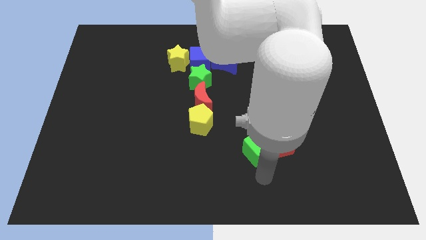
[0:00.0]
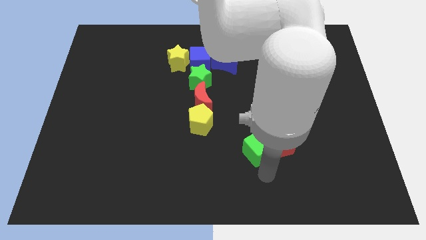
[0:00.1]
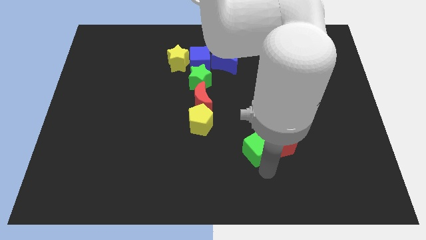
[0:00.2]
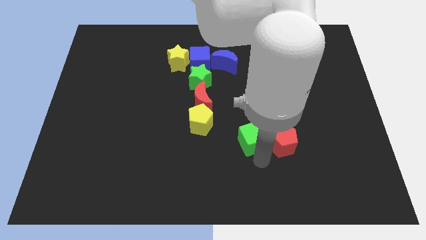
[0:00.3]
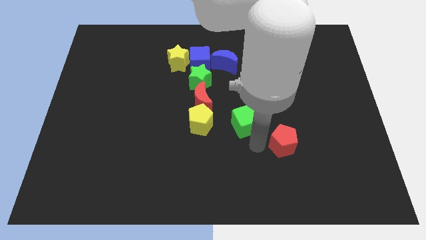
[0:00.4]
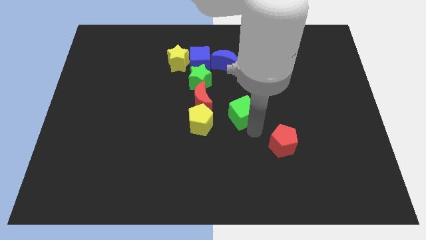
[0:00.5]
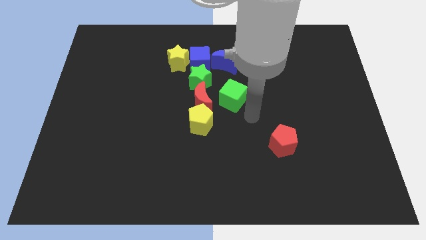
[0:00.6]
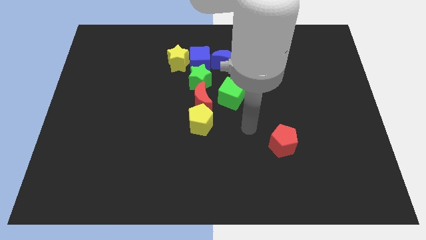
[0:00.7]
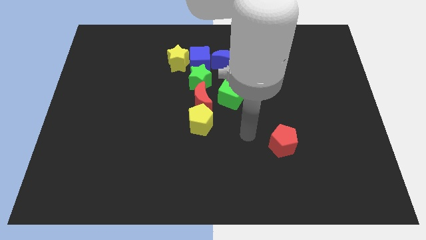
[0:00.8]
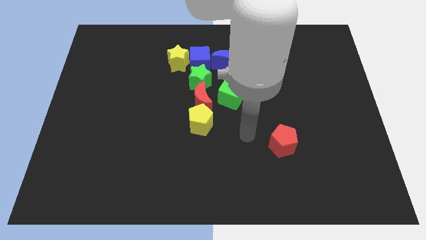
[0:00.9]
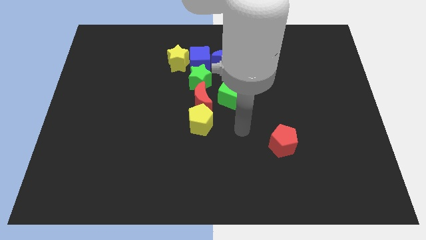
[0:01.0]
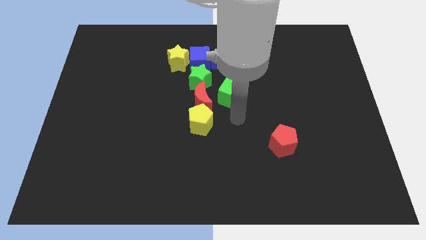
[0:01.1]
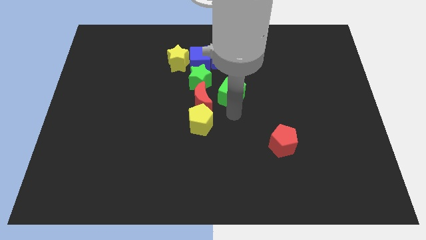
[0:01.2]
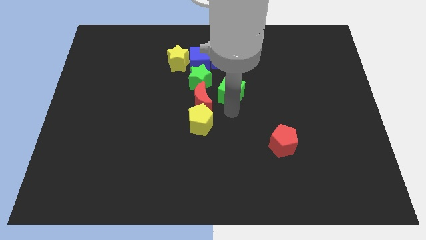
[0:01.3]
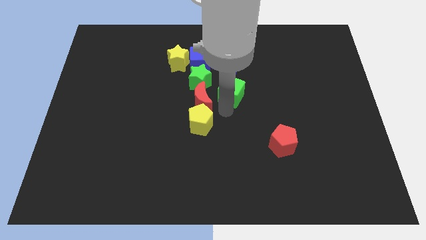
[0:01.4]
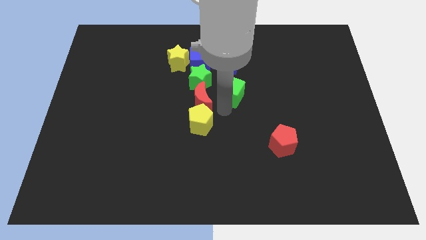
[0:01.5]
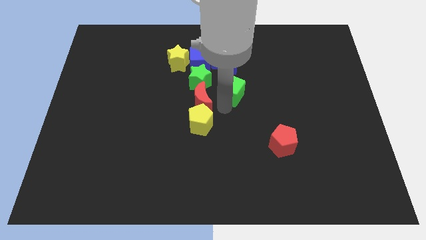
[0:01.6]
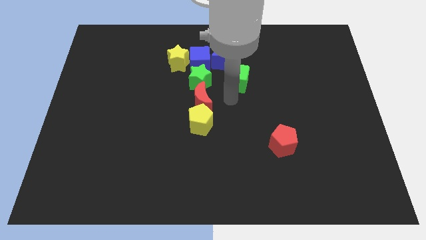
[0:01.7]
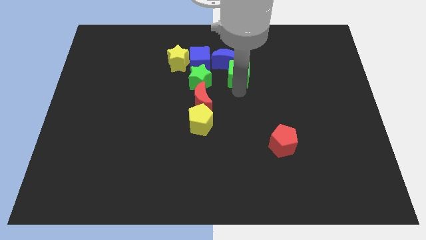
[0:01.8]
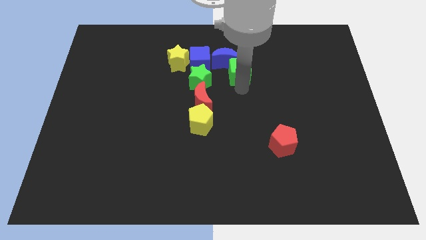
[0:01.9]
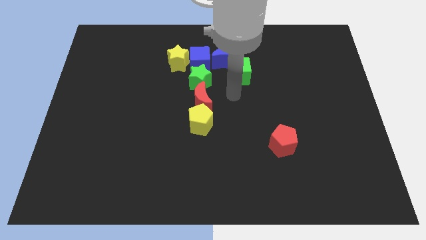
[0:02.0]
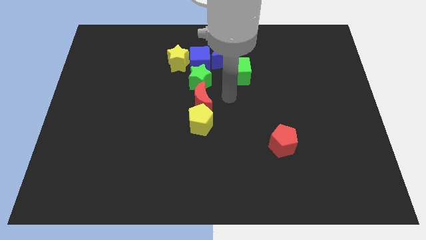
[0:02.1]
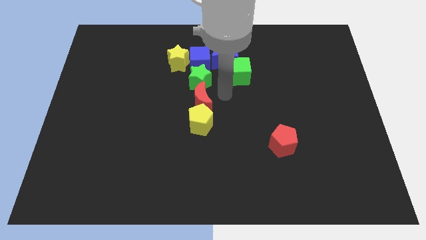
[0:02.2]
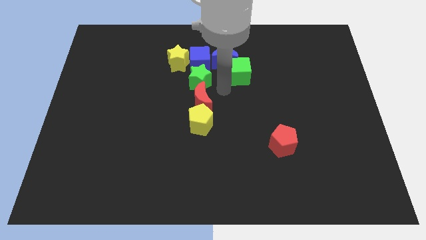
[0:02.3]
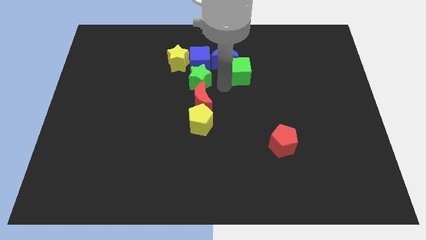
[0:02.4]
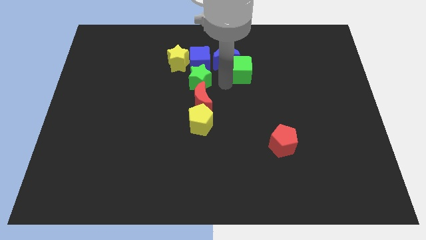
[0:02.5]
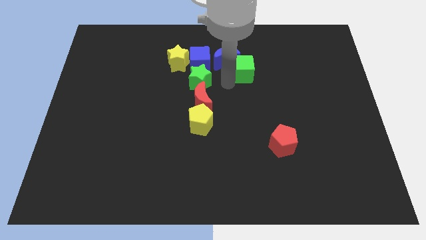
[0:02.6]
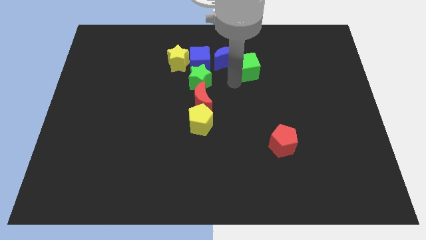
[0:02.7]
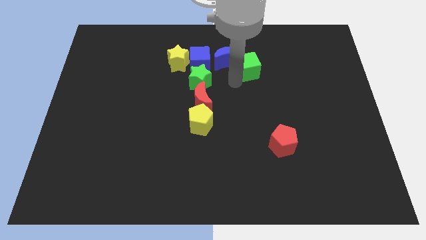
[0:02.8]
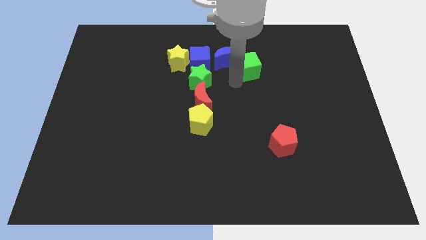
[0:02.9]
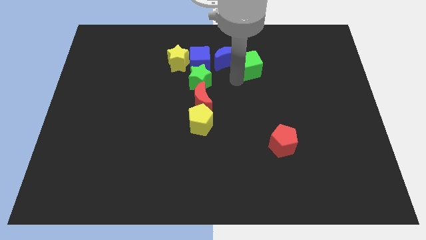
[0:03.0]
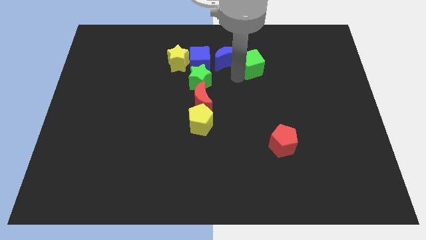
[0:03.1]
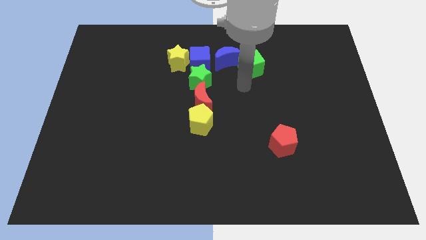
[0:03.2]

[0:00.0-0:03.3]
push the green cube into the blue moon

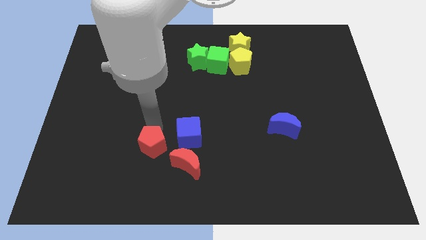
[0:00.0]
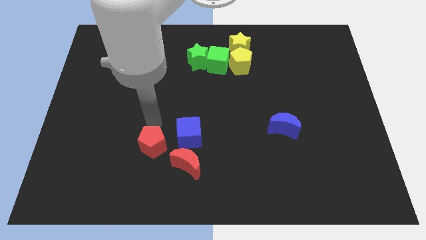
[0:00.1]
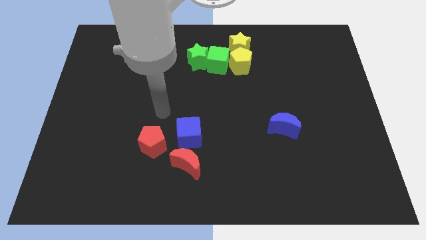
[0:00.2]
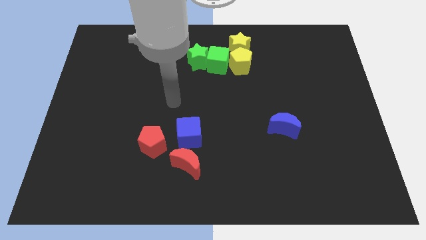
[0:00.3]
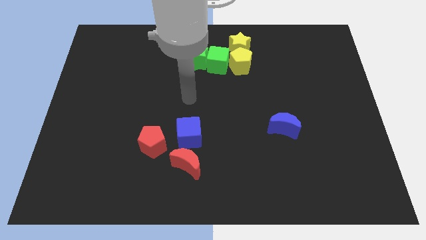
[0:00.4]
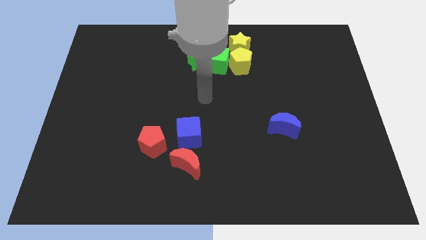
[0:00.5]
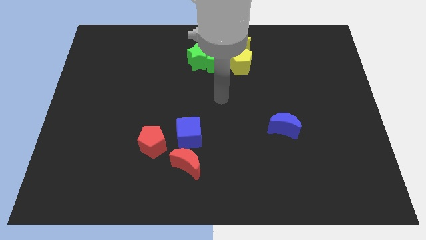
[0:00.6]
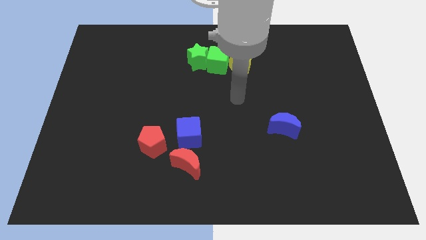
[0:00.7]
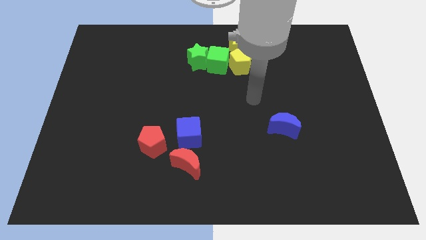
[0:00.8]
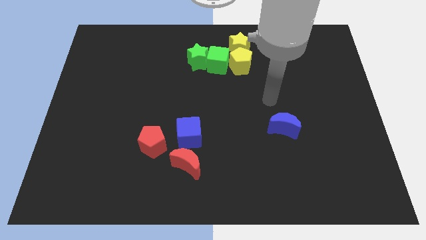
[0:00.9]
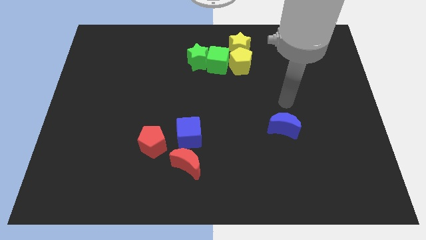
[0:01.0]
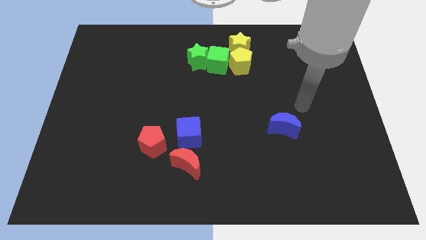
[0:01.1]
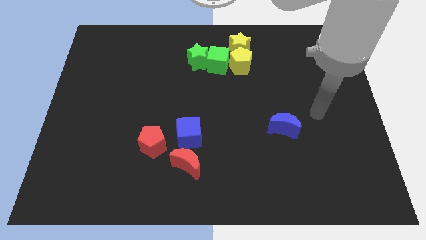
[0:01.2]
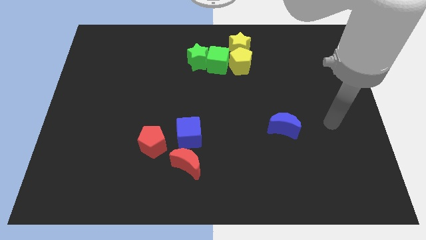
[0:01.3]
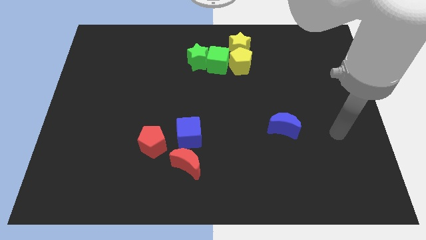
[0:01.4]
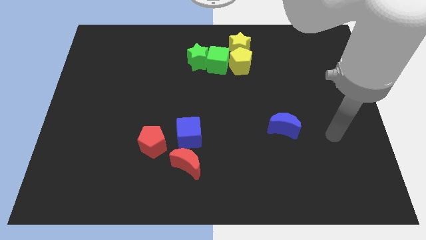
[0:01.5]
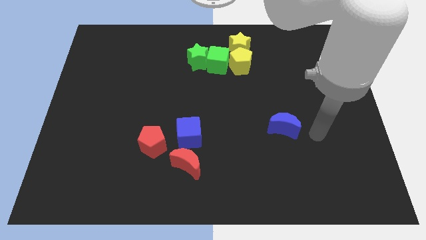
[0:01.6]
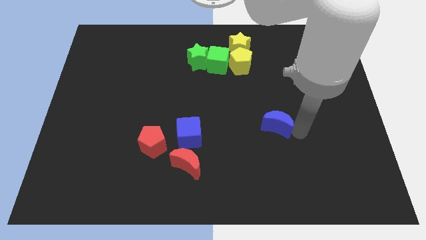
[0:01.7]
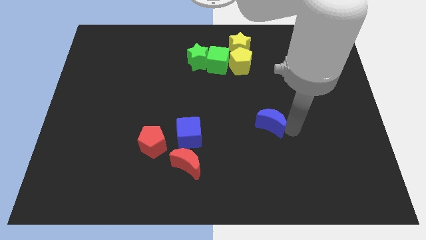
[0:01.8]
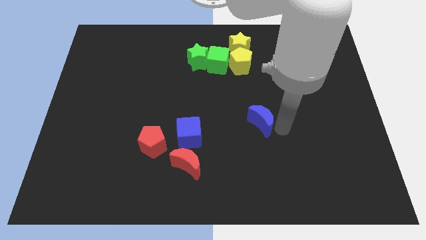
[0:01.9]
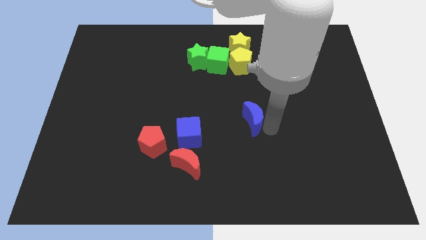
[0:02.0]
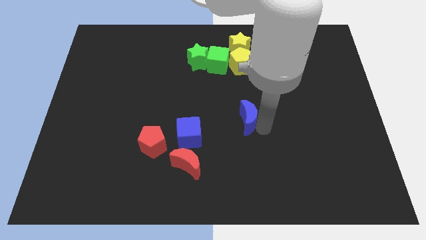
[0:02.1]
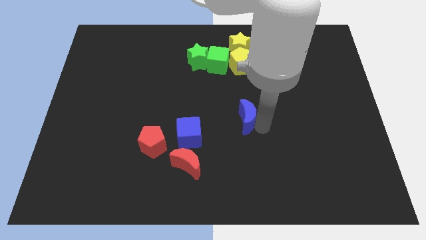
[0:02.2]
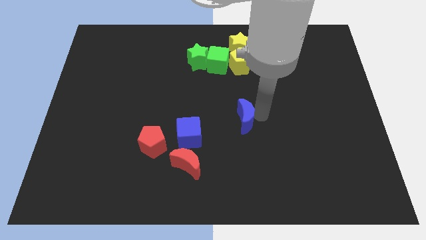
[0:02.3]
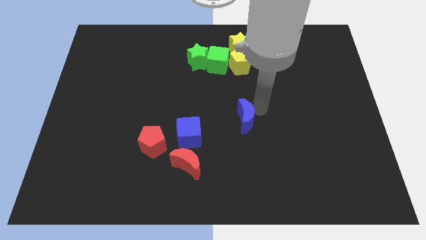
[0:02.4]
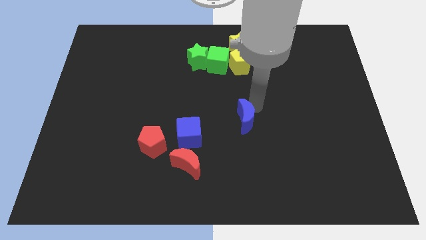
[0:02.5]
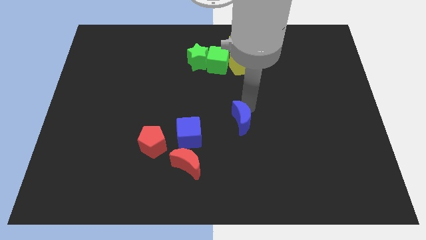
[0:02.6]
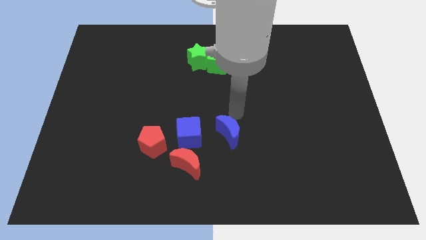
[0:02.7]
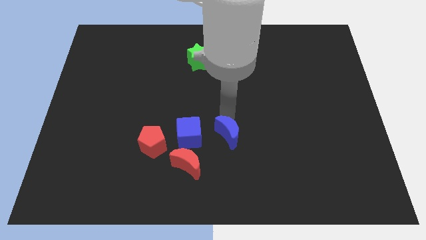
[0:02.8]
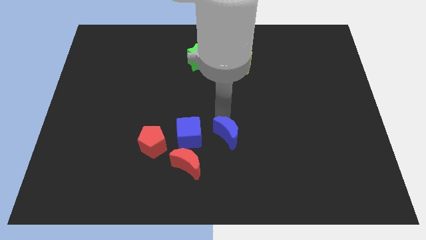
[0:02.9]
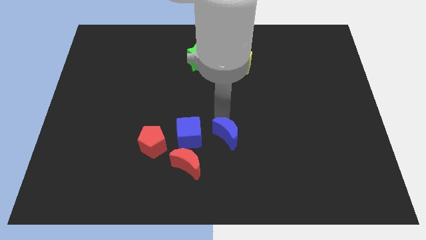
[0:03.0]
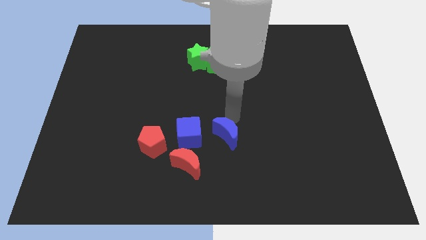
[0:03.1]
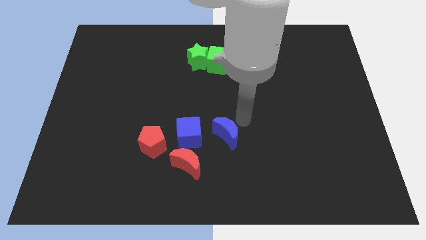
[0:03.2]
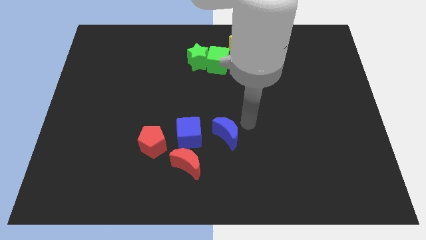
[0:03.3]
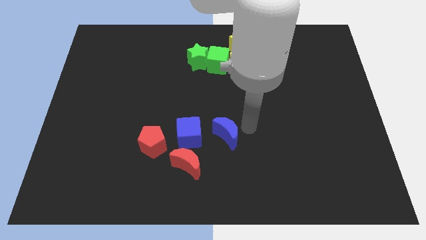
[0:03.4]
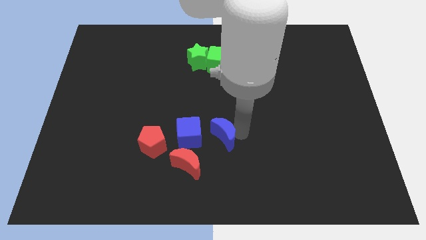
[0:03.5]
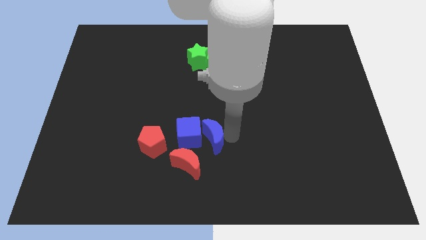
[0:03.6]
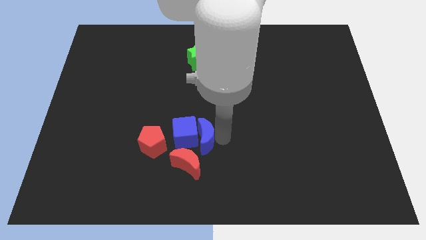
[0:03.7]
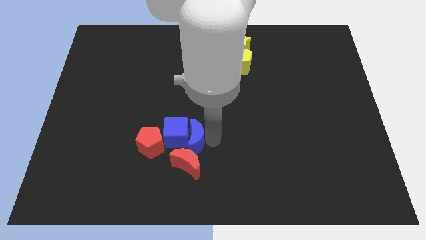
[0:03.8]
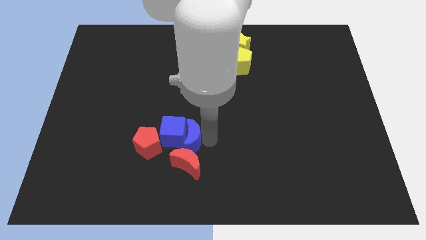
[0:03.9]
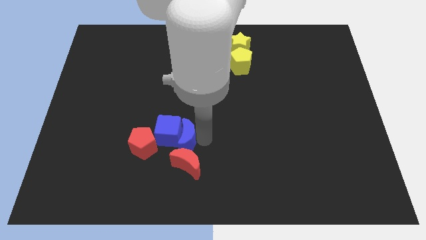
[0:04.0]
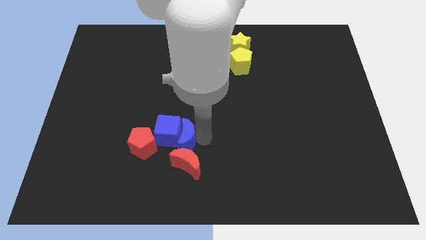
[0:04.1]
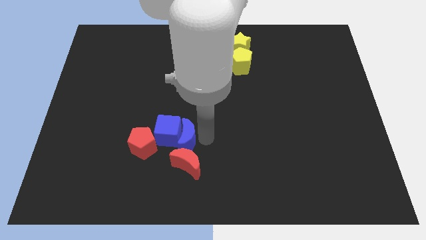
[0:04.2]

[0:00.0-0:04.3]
push the blue blocks towards the left side of the board

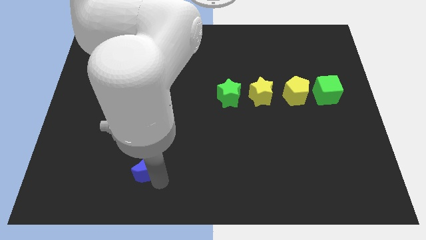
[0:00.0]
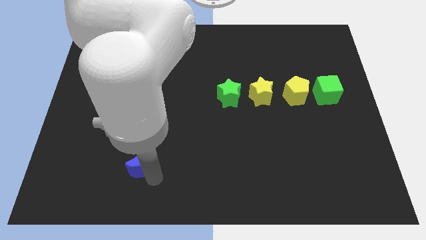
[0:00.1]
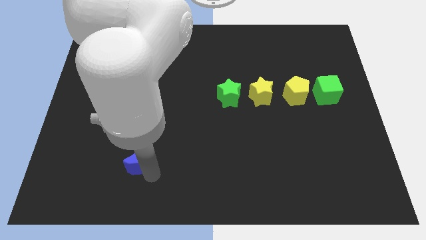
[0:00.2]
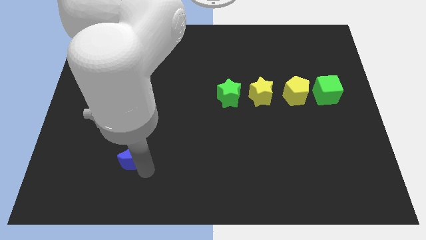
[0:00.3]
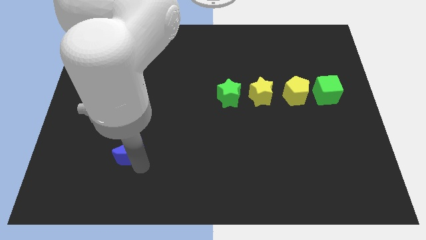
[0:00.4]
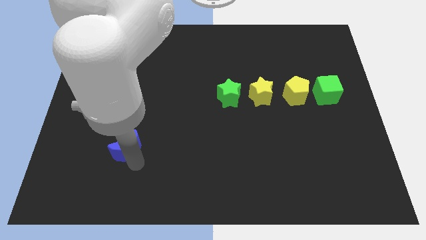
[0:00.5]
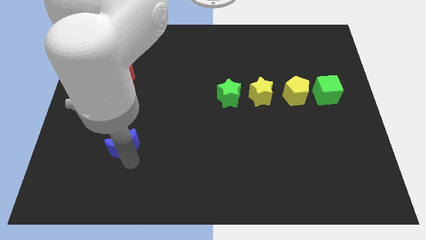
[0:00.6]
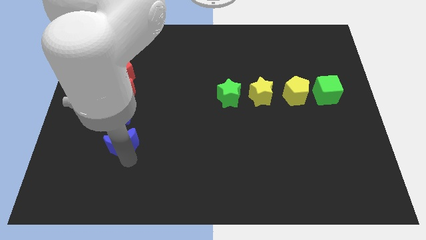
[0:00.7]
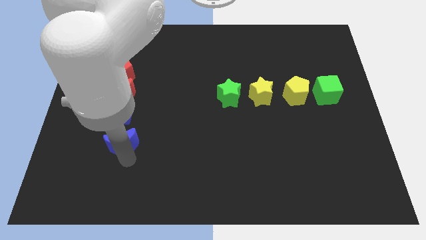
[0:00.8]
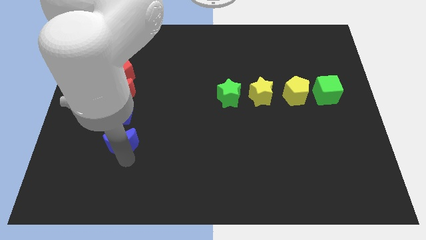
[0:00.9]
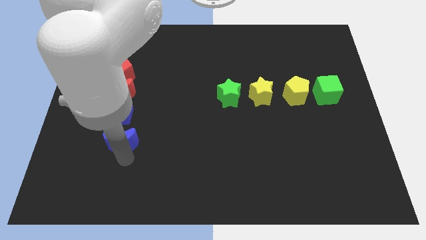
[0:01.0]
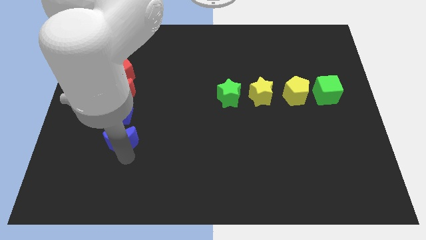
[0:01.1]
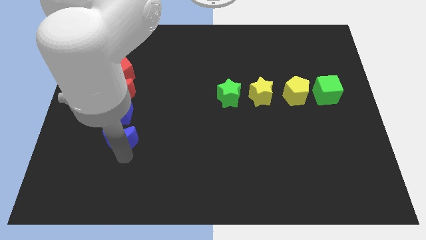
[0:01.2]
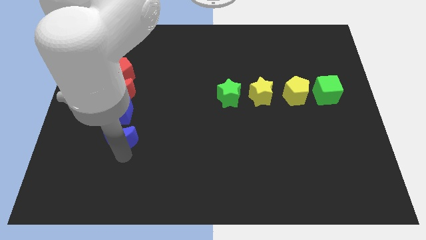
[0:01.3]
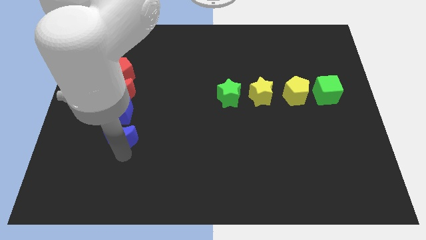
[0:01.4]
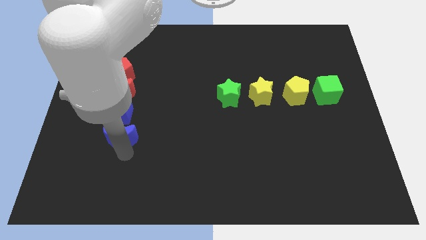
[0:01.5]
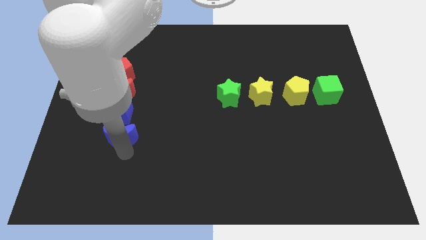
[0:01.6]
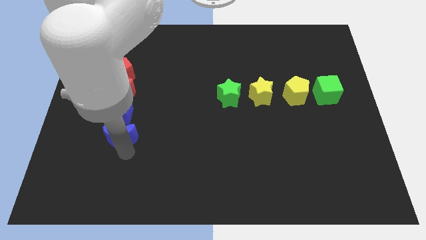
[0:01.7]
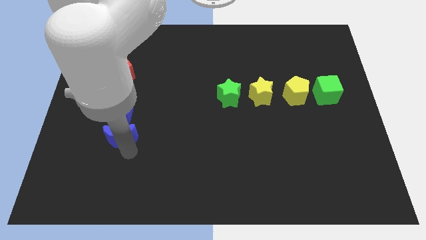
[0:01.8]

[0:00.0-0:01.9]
move the blue crescent slightly towards the blue cube
